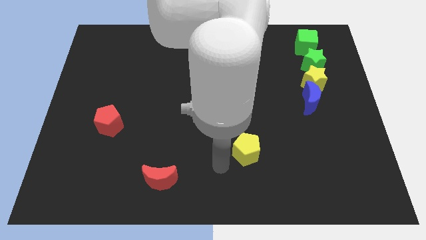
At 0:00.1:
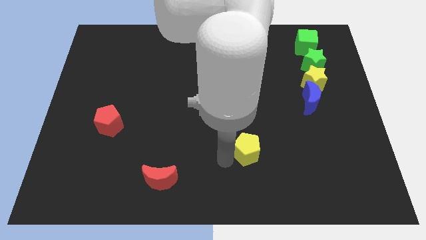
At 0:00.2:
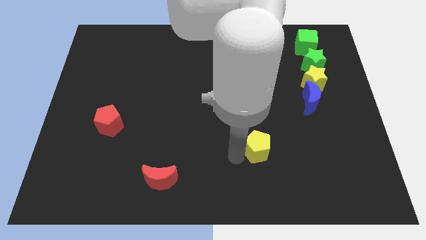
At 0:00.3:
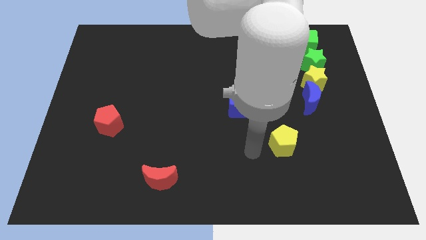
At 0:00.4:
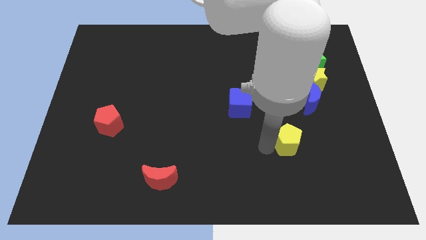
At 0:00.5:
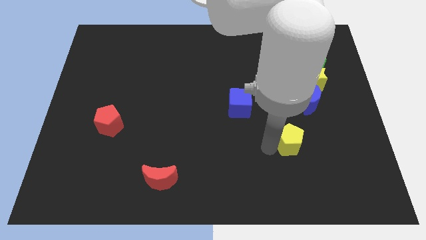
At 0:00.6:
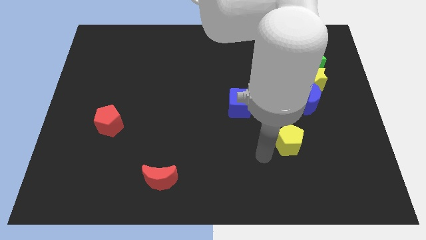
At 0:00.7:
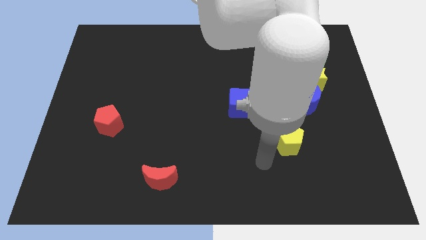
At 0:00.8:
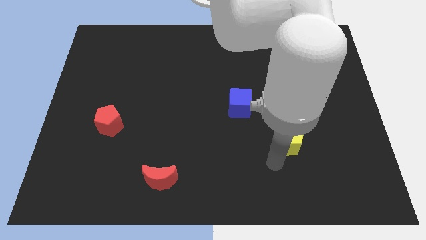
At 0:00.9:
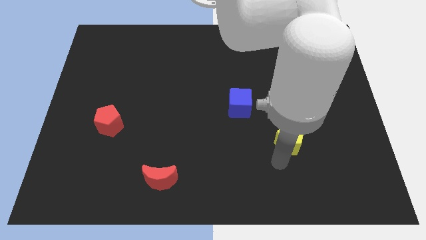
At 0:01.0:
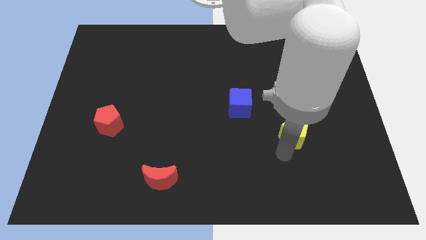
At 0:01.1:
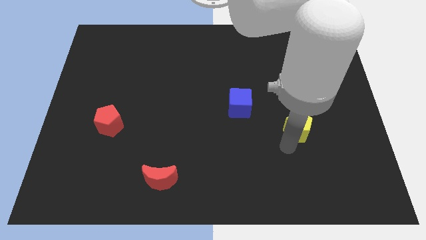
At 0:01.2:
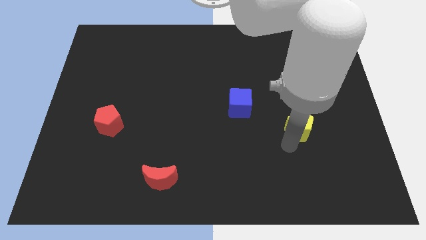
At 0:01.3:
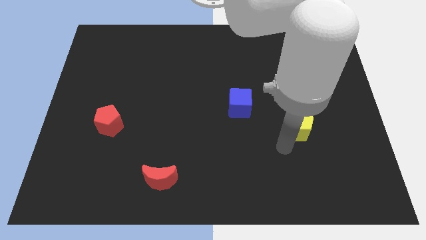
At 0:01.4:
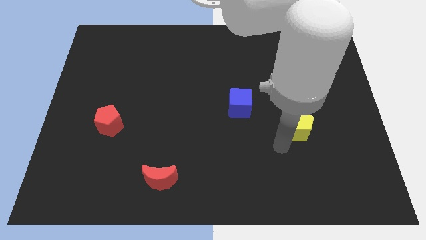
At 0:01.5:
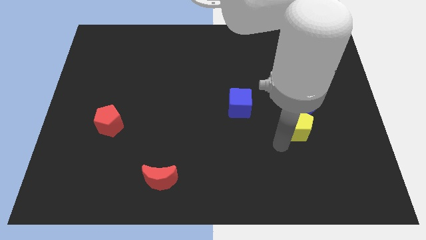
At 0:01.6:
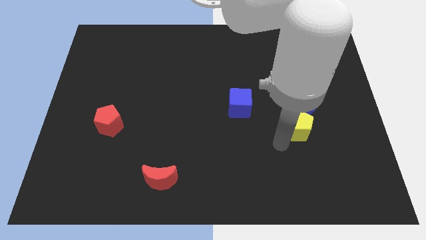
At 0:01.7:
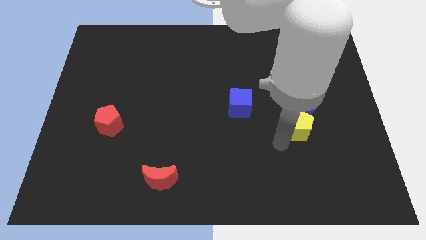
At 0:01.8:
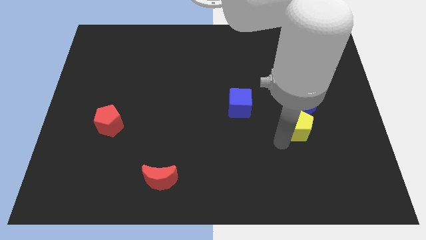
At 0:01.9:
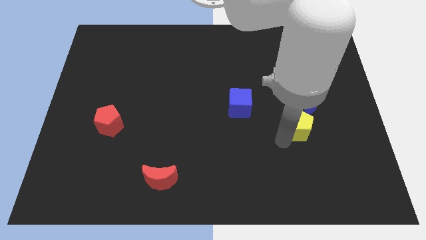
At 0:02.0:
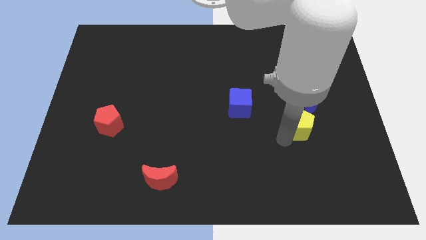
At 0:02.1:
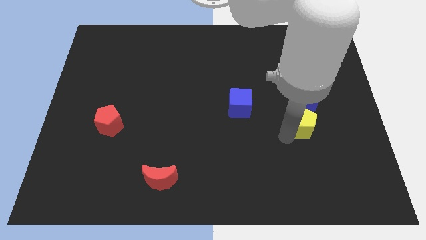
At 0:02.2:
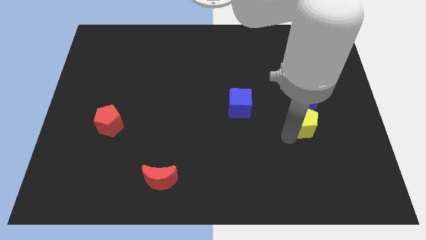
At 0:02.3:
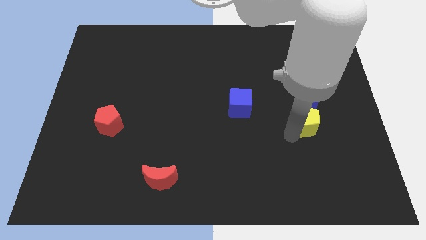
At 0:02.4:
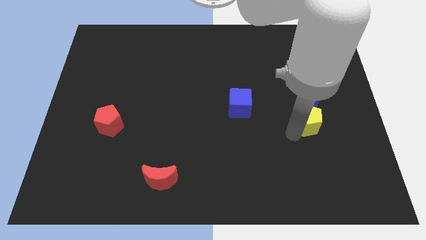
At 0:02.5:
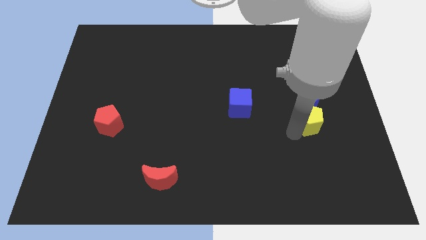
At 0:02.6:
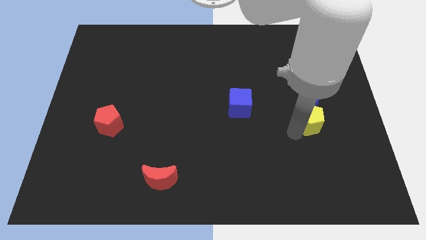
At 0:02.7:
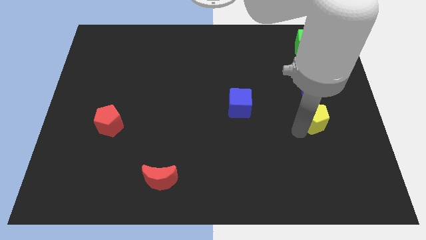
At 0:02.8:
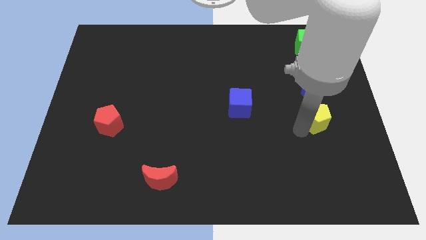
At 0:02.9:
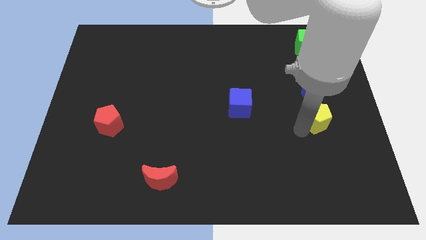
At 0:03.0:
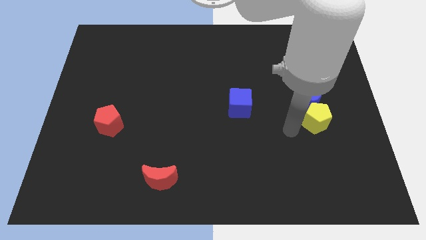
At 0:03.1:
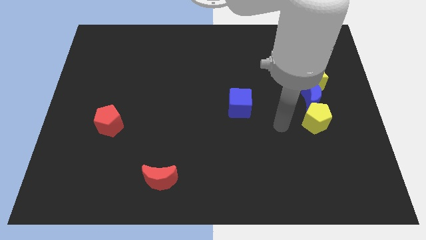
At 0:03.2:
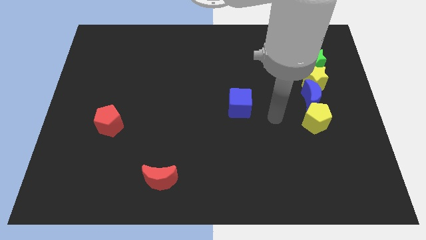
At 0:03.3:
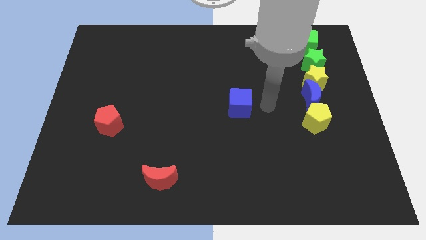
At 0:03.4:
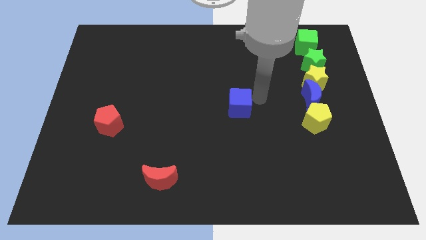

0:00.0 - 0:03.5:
place the yellow pentagon below the blue crescent

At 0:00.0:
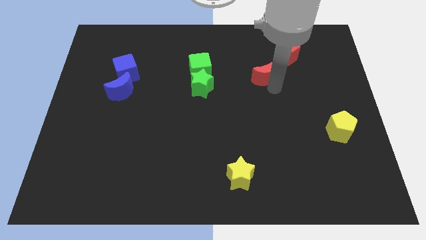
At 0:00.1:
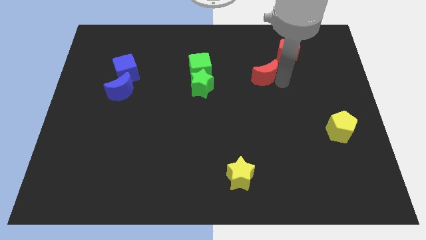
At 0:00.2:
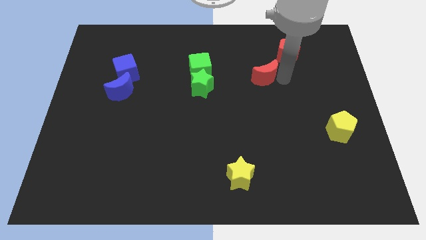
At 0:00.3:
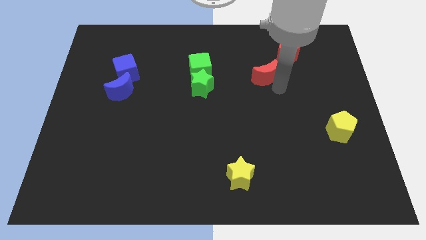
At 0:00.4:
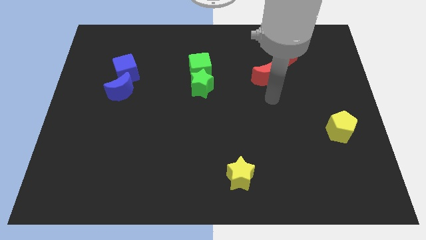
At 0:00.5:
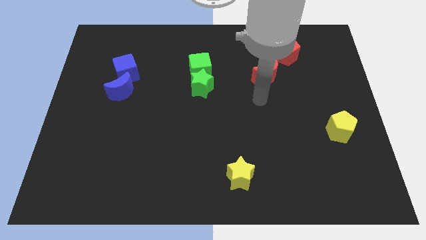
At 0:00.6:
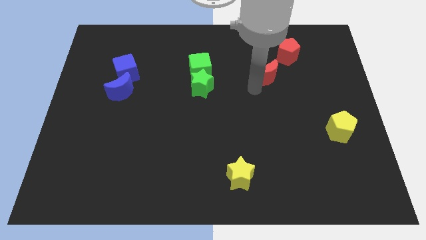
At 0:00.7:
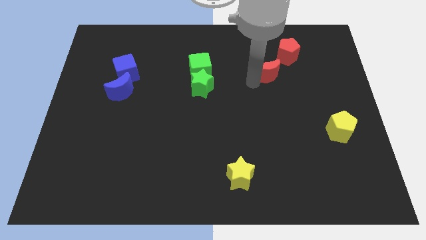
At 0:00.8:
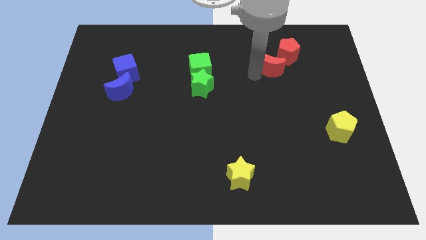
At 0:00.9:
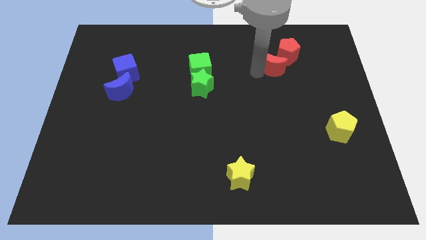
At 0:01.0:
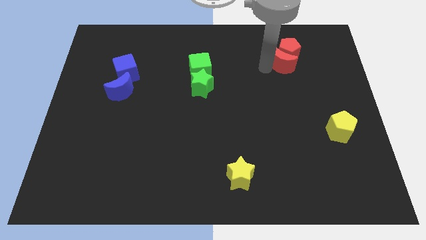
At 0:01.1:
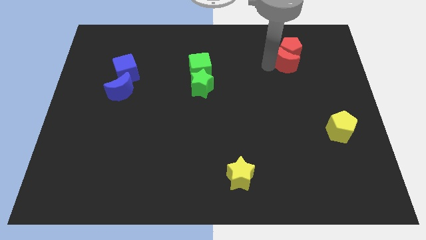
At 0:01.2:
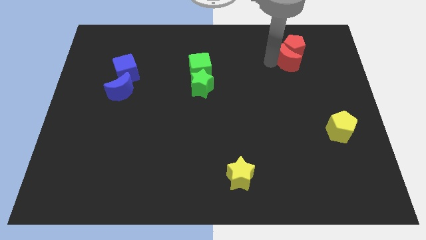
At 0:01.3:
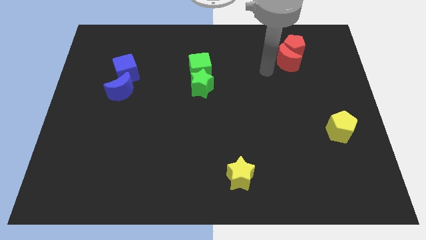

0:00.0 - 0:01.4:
push red moon into red pentagon

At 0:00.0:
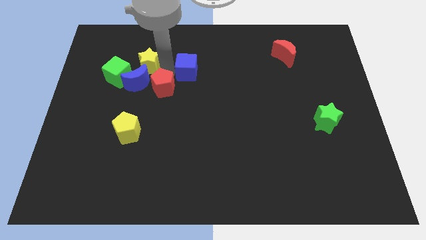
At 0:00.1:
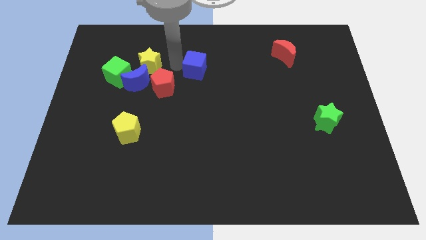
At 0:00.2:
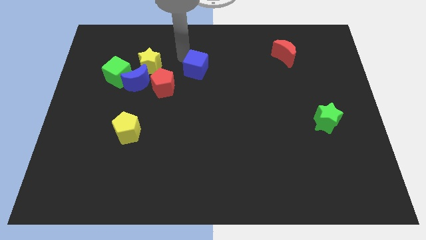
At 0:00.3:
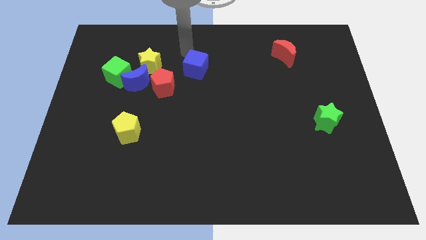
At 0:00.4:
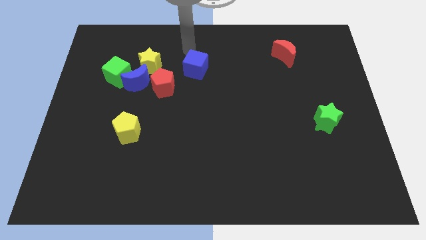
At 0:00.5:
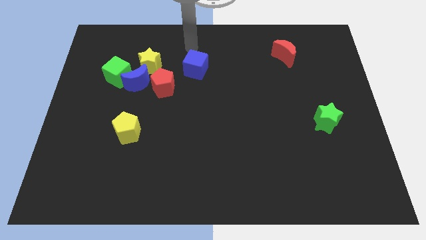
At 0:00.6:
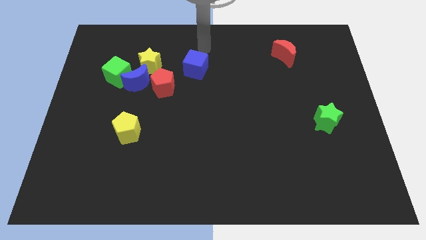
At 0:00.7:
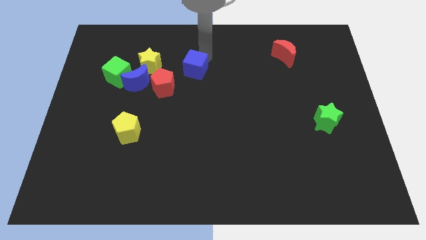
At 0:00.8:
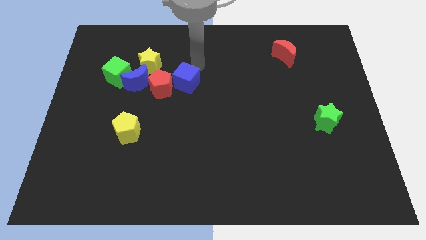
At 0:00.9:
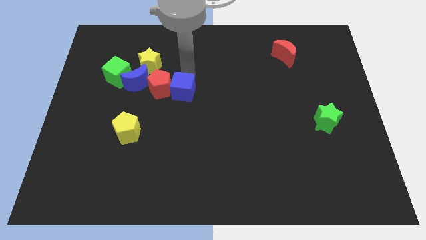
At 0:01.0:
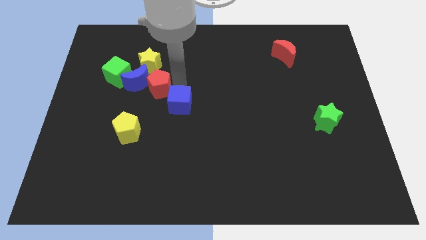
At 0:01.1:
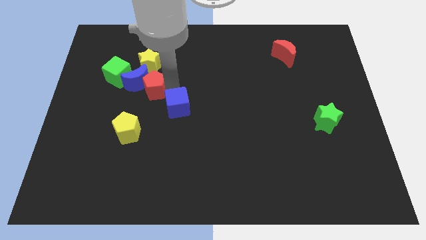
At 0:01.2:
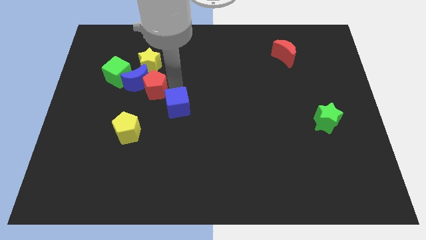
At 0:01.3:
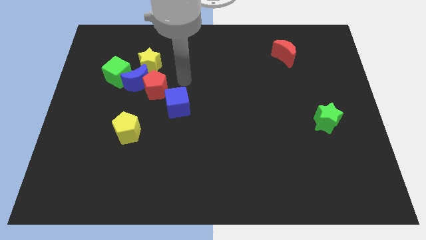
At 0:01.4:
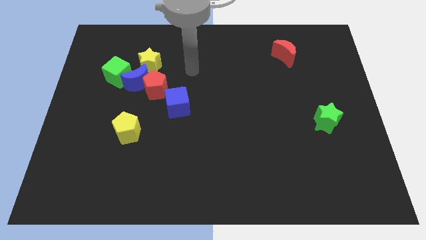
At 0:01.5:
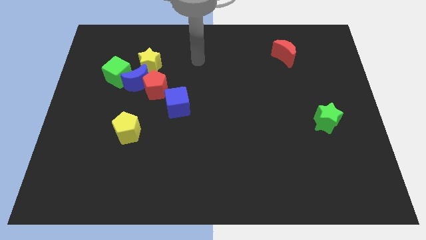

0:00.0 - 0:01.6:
push the blue cube into the group of blocks

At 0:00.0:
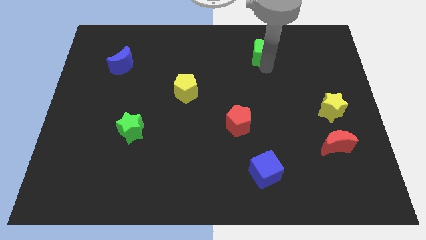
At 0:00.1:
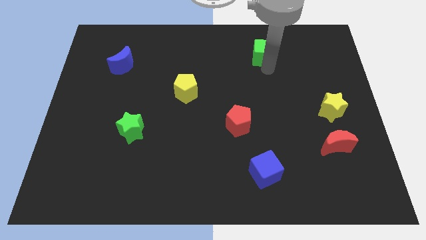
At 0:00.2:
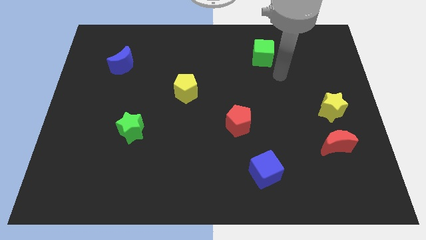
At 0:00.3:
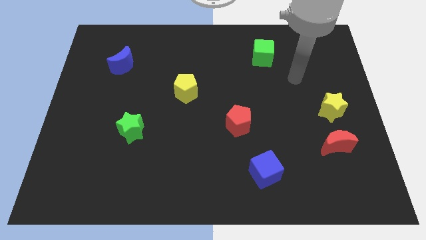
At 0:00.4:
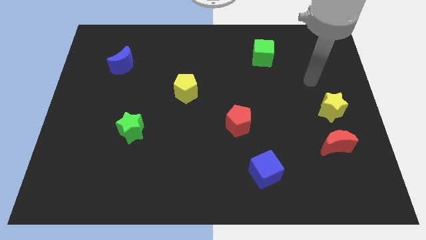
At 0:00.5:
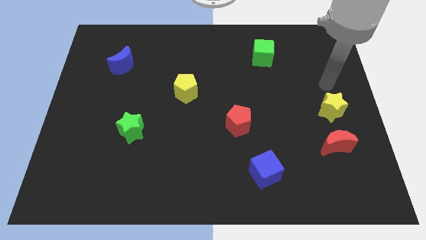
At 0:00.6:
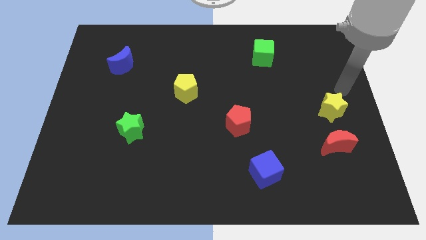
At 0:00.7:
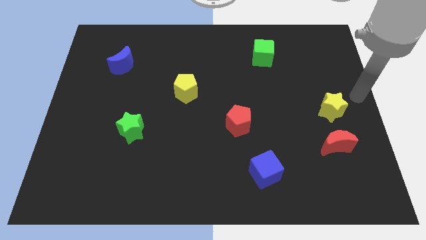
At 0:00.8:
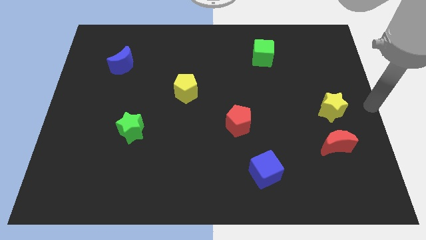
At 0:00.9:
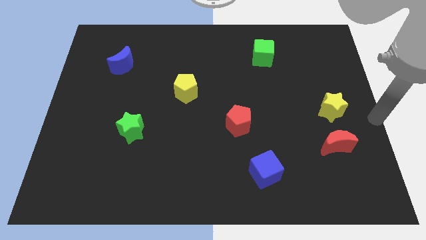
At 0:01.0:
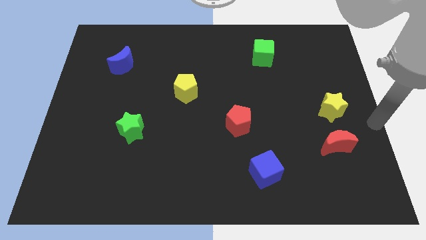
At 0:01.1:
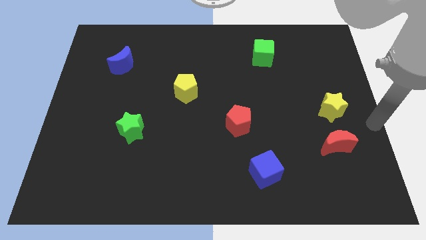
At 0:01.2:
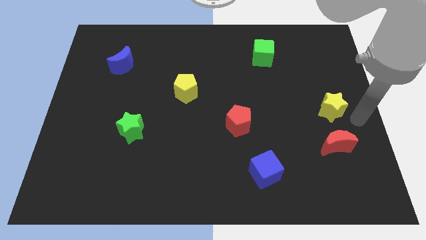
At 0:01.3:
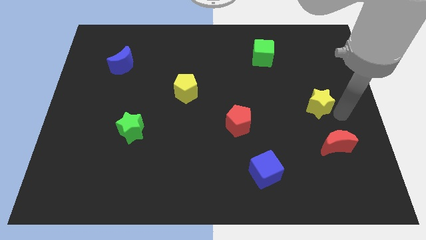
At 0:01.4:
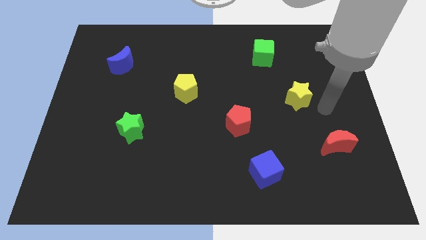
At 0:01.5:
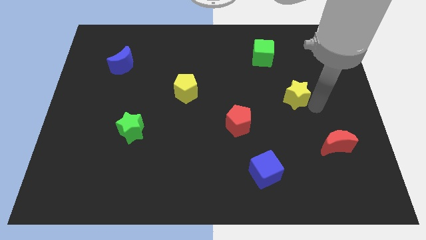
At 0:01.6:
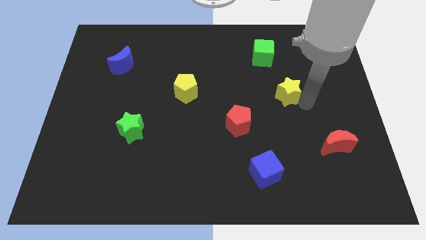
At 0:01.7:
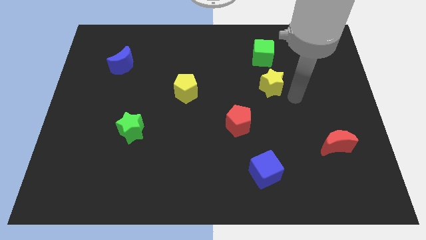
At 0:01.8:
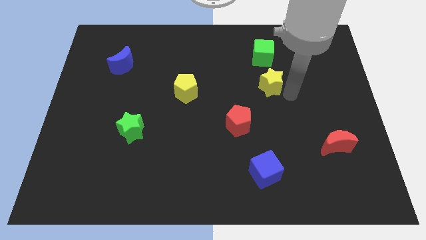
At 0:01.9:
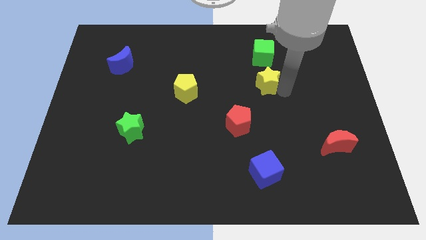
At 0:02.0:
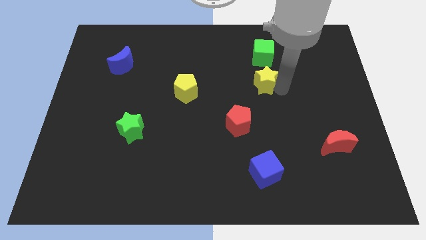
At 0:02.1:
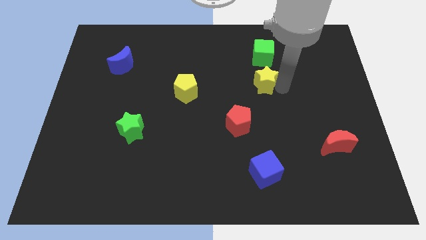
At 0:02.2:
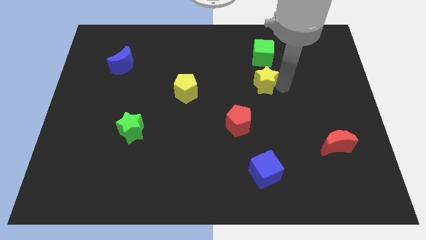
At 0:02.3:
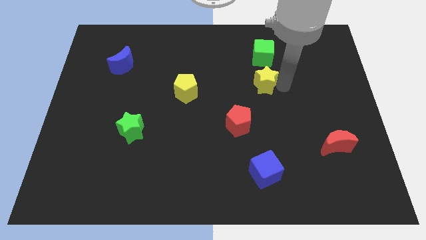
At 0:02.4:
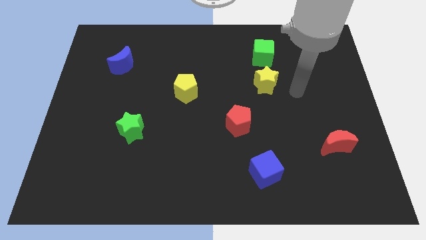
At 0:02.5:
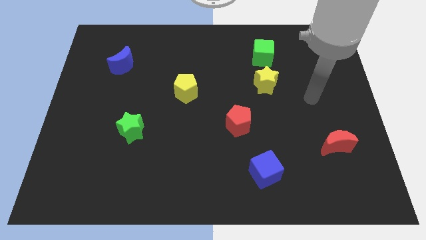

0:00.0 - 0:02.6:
put the yellow star underneath the green cube
